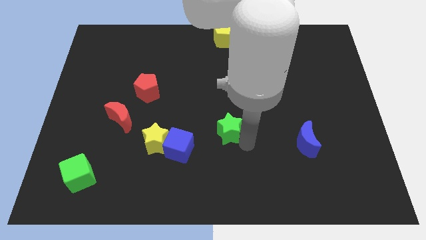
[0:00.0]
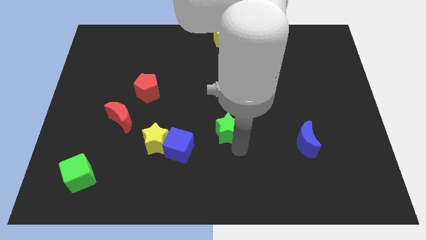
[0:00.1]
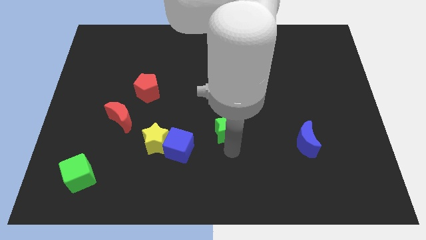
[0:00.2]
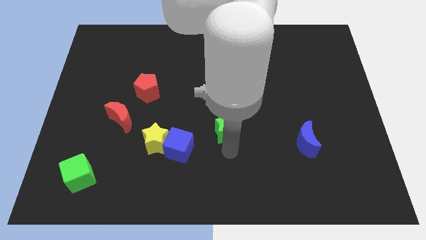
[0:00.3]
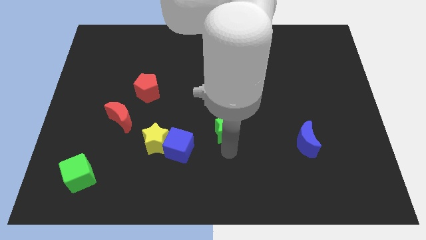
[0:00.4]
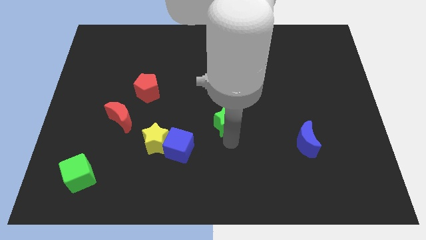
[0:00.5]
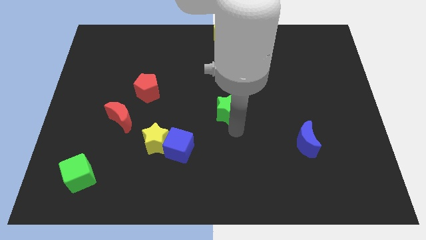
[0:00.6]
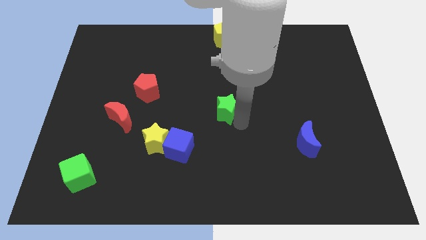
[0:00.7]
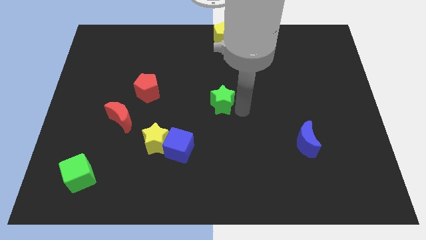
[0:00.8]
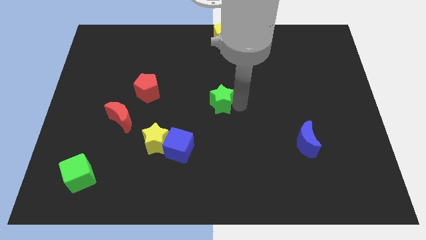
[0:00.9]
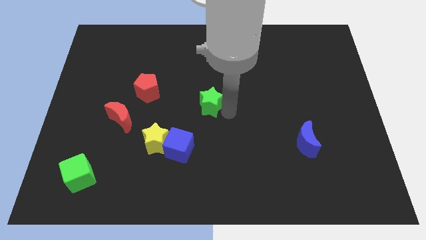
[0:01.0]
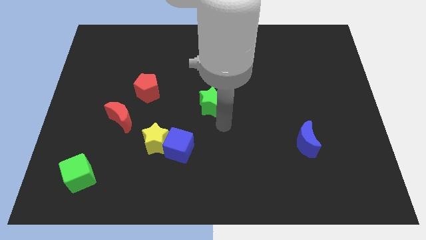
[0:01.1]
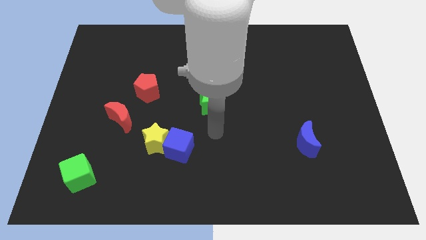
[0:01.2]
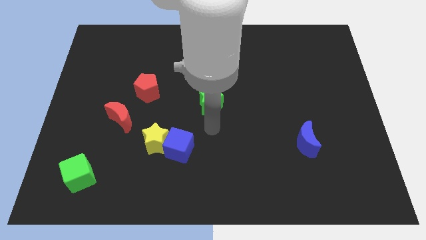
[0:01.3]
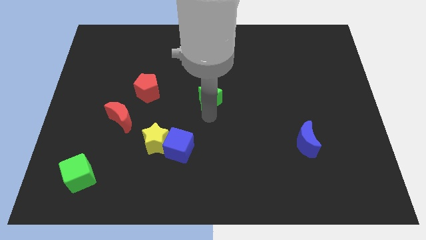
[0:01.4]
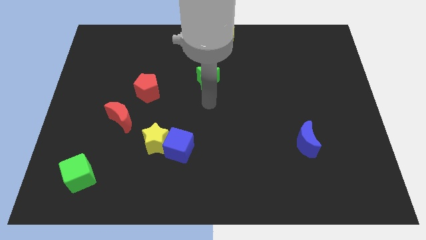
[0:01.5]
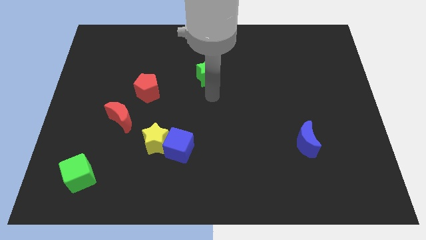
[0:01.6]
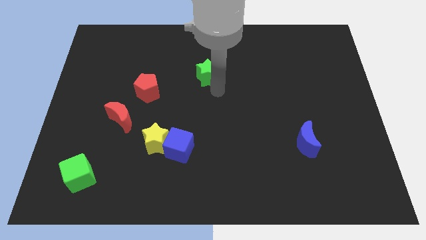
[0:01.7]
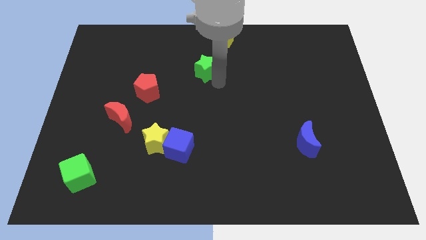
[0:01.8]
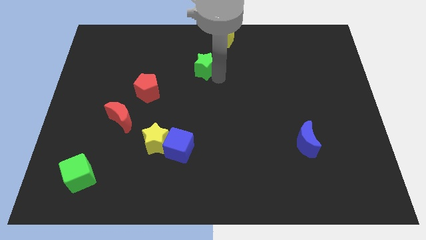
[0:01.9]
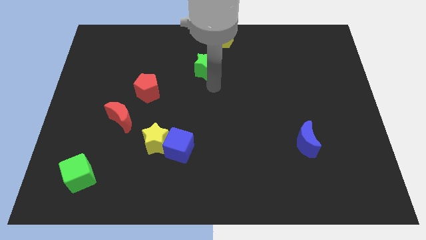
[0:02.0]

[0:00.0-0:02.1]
move the green star towards the yellow pentagon

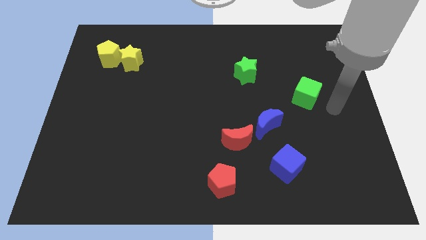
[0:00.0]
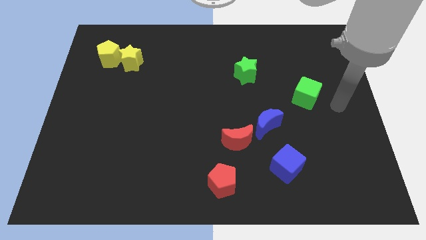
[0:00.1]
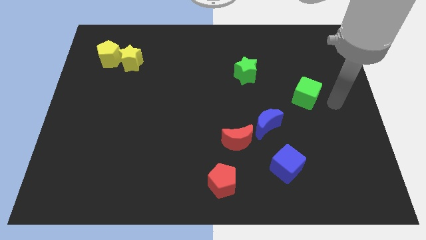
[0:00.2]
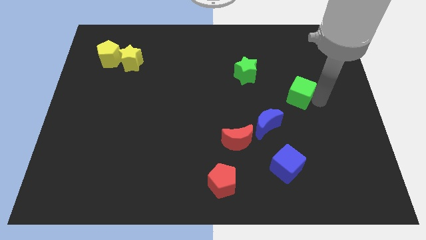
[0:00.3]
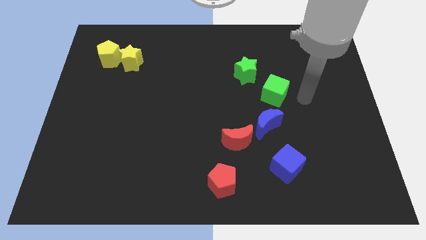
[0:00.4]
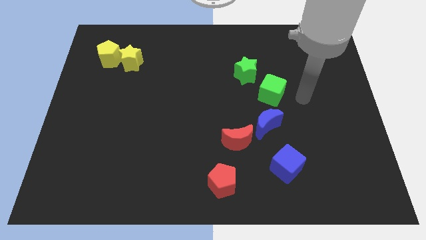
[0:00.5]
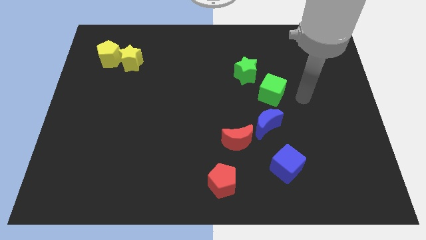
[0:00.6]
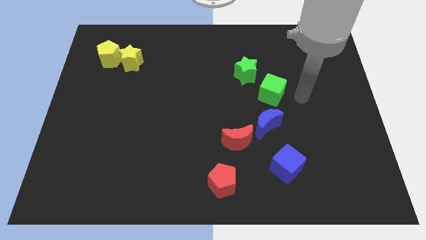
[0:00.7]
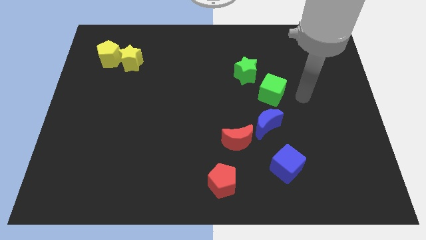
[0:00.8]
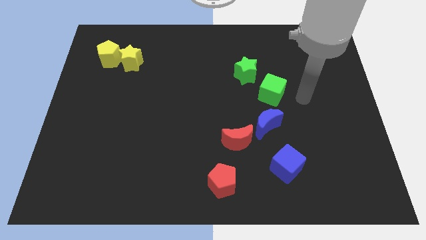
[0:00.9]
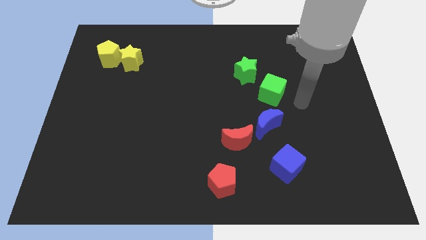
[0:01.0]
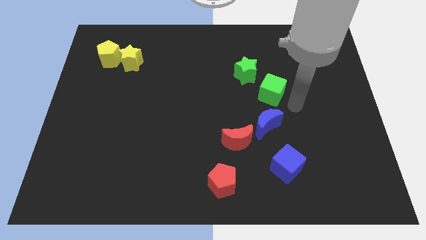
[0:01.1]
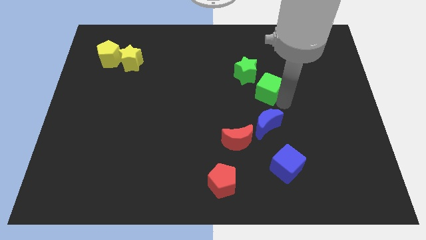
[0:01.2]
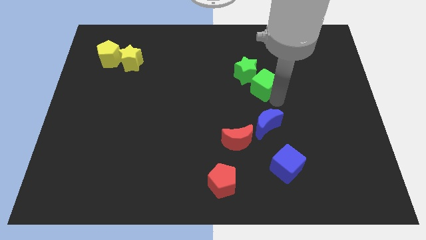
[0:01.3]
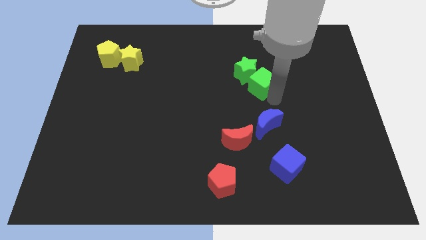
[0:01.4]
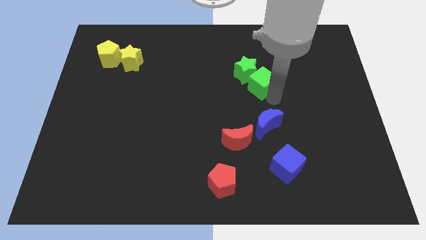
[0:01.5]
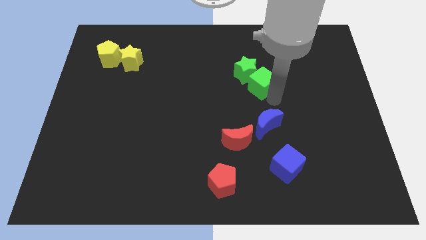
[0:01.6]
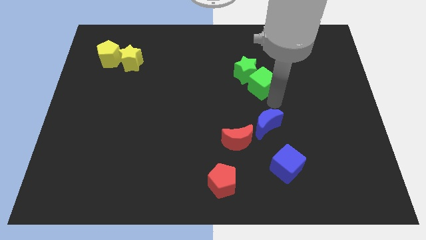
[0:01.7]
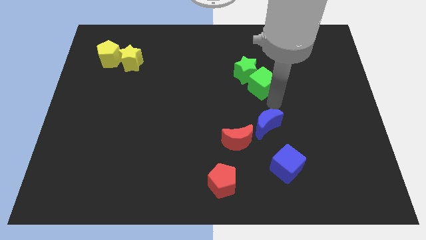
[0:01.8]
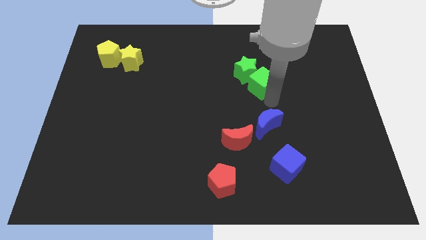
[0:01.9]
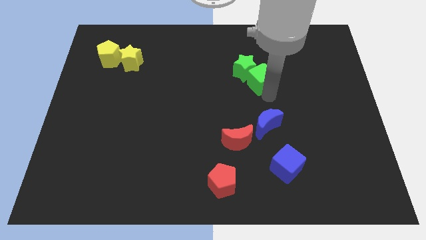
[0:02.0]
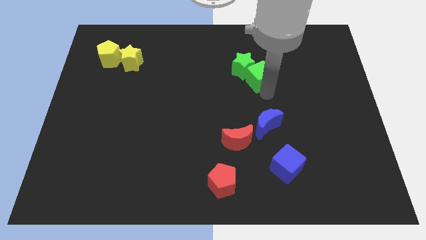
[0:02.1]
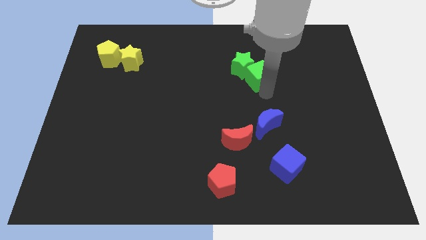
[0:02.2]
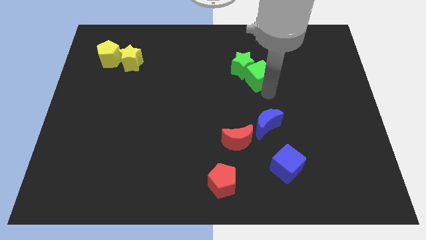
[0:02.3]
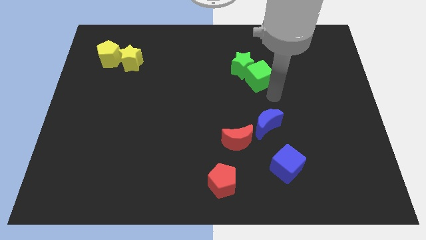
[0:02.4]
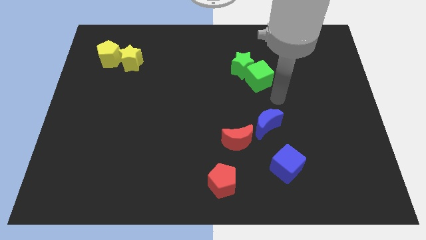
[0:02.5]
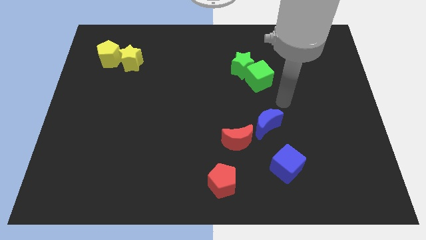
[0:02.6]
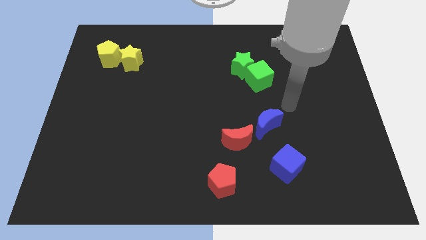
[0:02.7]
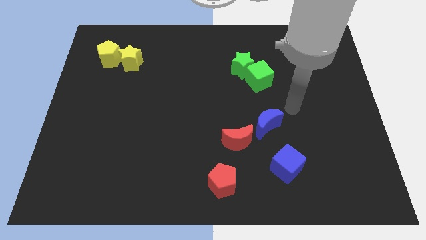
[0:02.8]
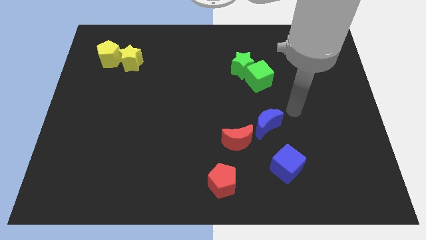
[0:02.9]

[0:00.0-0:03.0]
move the green cube into green star

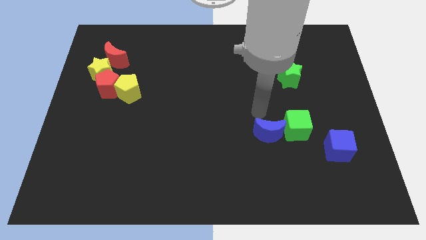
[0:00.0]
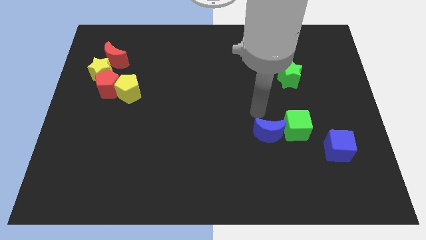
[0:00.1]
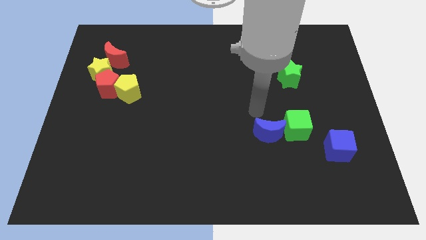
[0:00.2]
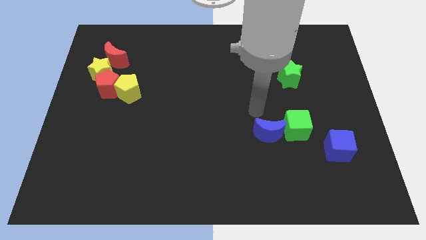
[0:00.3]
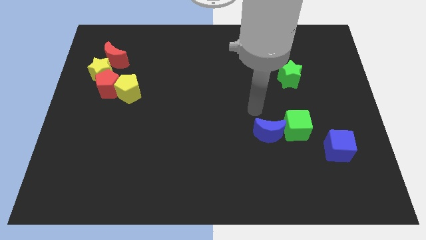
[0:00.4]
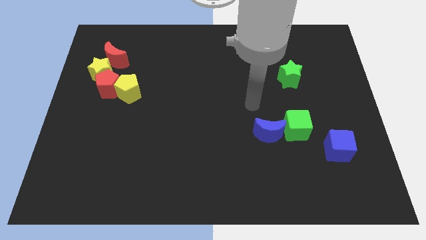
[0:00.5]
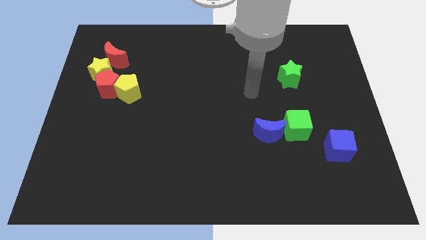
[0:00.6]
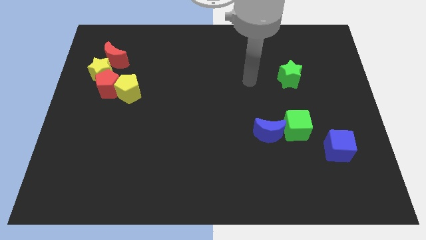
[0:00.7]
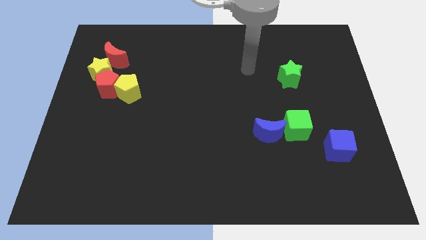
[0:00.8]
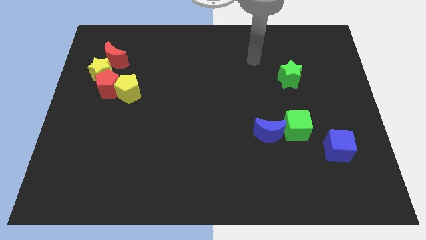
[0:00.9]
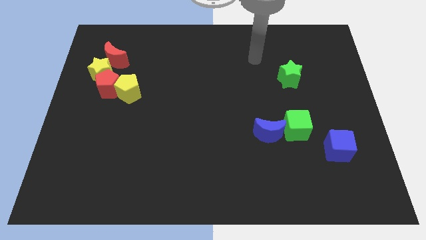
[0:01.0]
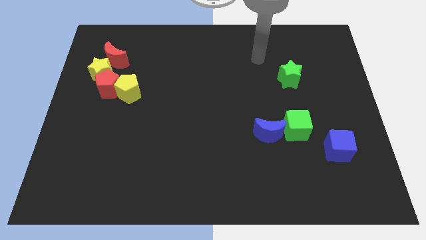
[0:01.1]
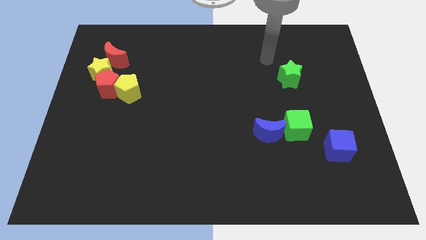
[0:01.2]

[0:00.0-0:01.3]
go away from the blue moon

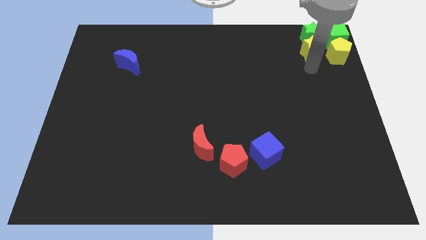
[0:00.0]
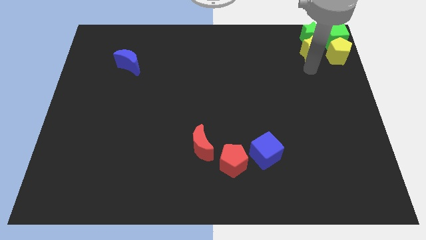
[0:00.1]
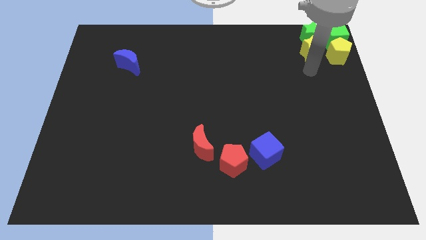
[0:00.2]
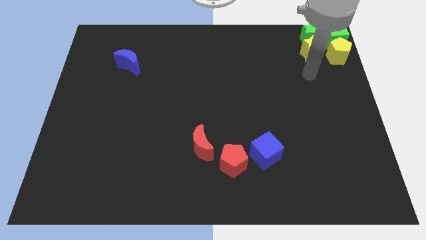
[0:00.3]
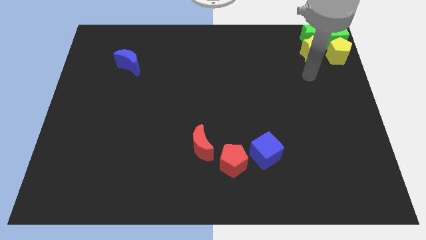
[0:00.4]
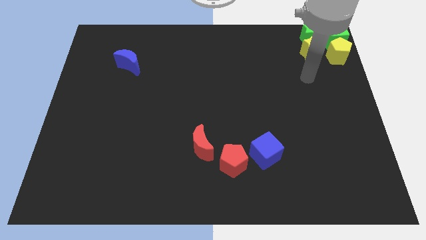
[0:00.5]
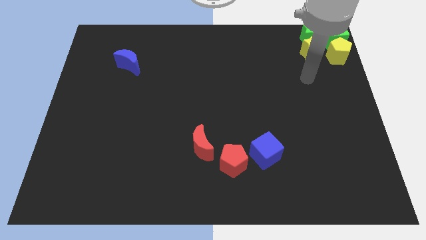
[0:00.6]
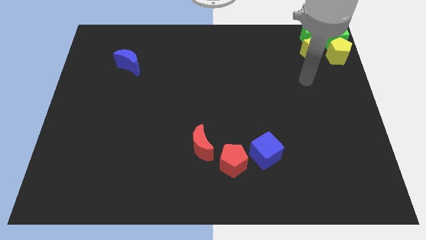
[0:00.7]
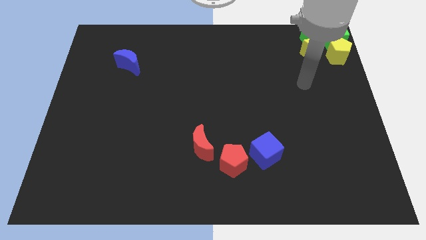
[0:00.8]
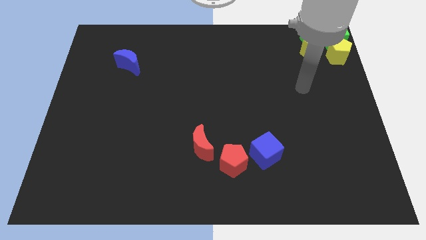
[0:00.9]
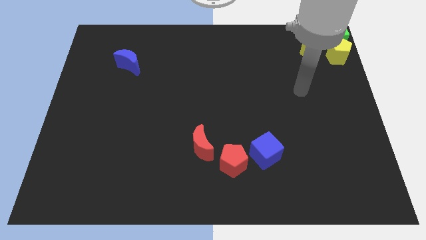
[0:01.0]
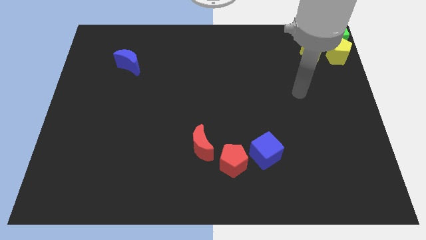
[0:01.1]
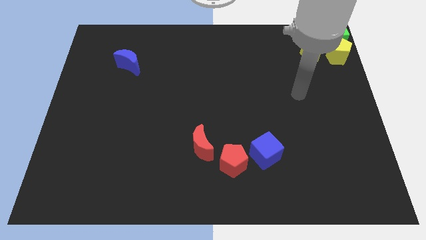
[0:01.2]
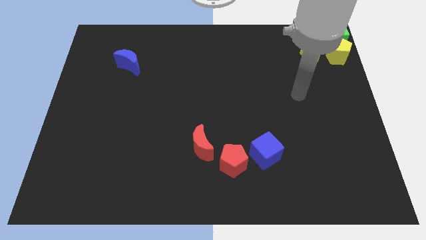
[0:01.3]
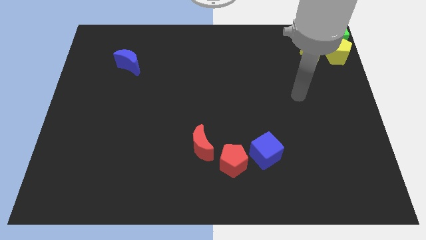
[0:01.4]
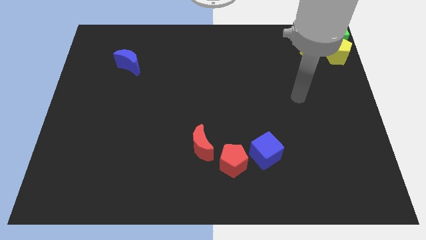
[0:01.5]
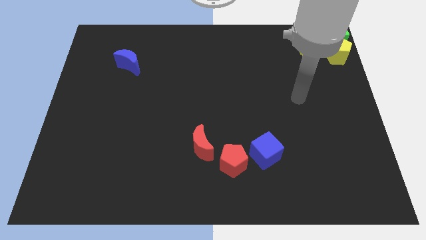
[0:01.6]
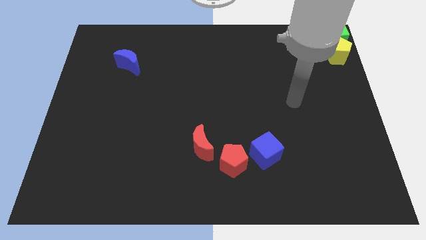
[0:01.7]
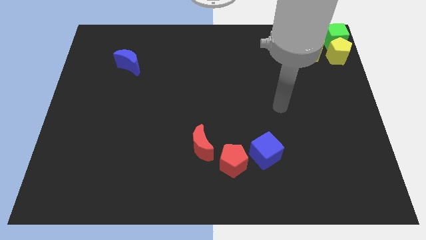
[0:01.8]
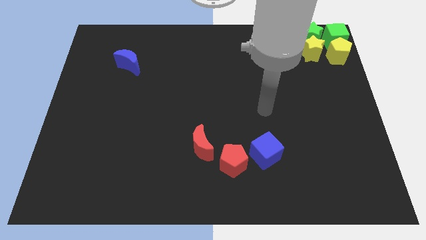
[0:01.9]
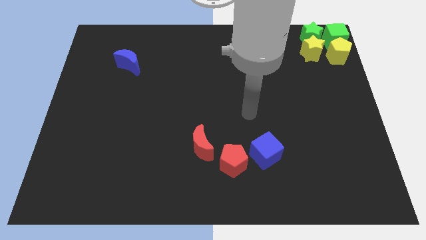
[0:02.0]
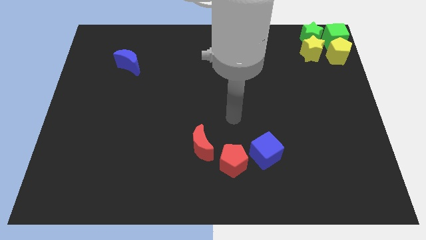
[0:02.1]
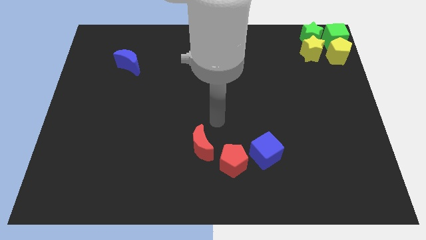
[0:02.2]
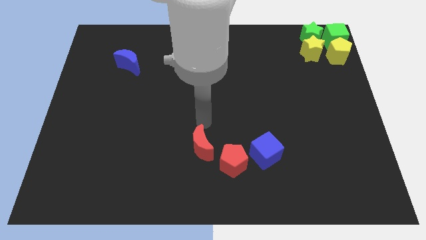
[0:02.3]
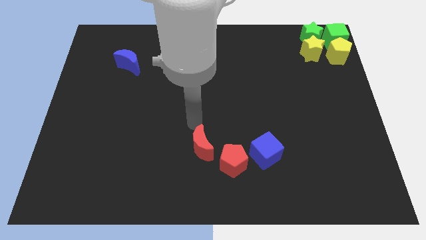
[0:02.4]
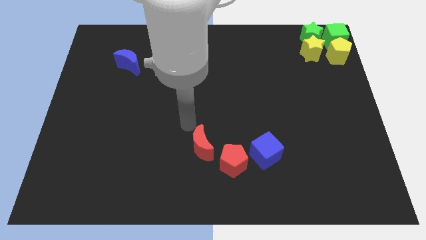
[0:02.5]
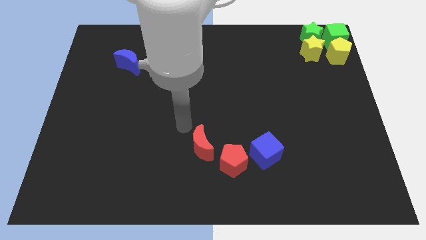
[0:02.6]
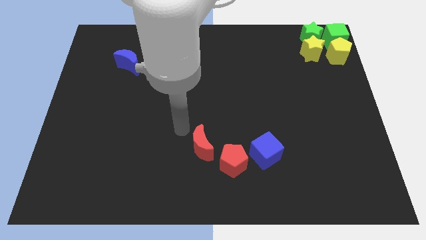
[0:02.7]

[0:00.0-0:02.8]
move the arm away from the yellow star
